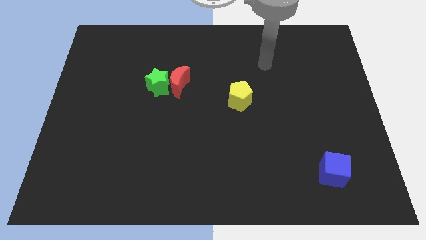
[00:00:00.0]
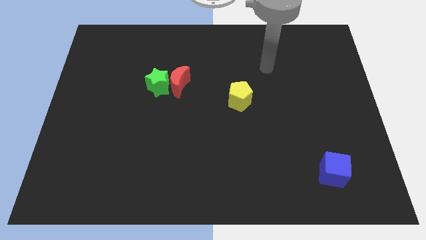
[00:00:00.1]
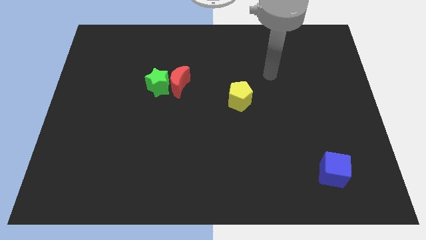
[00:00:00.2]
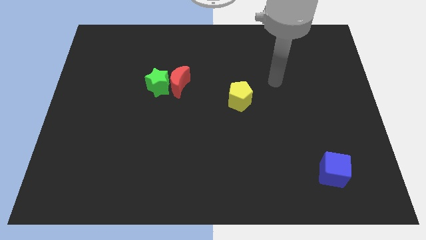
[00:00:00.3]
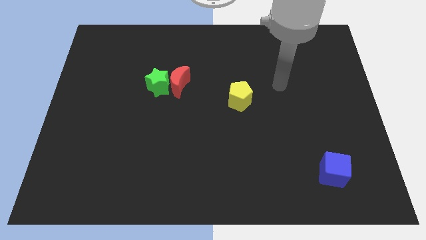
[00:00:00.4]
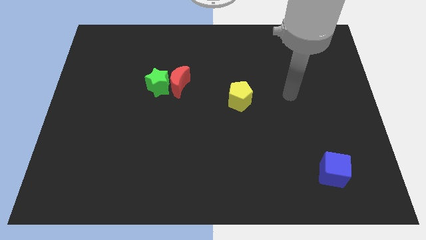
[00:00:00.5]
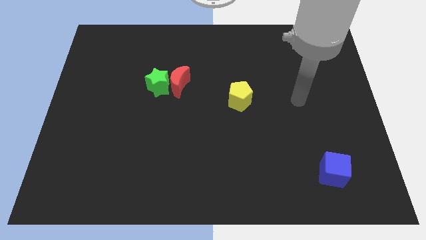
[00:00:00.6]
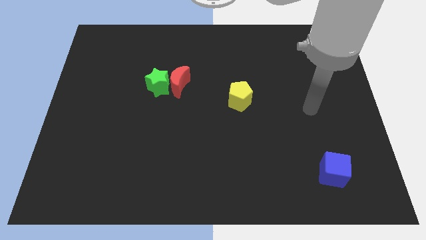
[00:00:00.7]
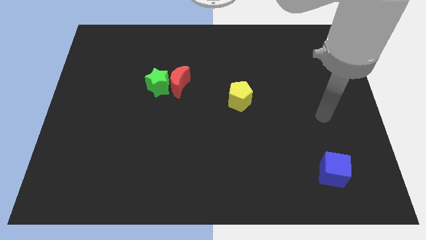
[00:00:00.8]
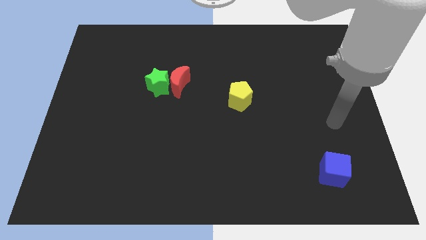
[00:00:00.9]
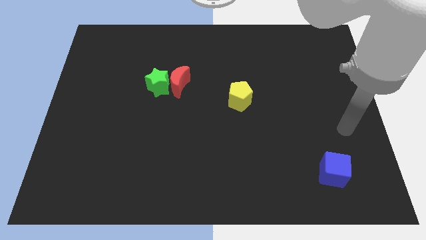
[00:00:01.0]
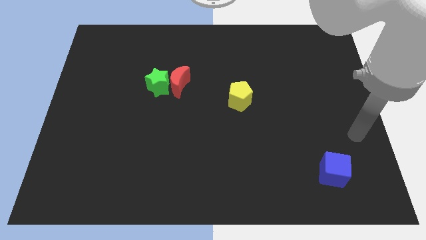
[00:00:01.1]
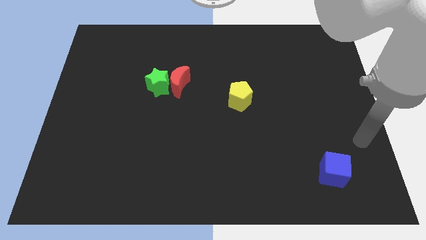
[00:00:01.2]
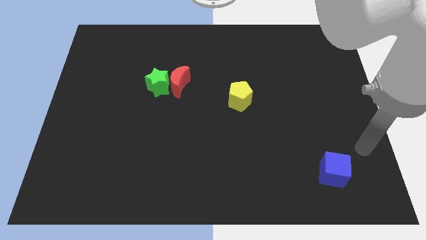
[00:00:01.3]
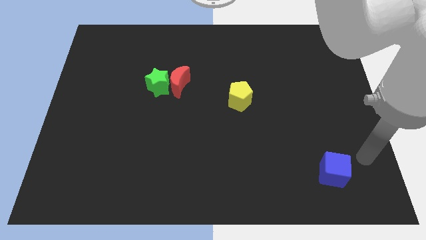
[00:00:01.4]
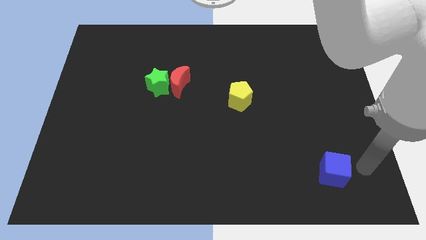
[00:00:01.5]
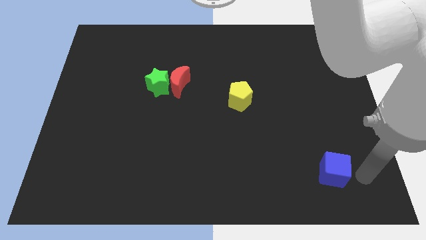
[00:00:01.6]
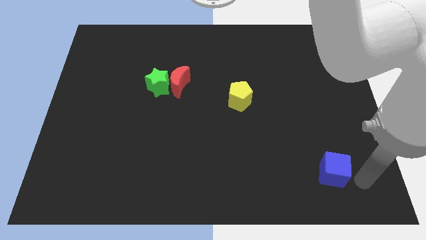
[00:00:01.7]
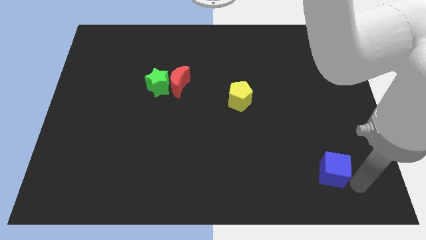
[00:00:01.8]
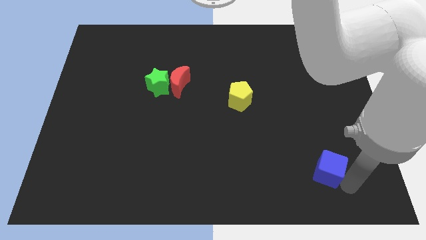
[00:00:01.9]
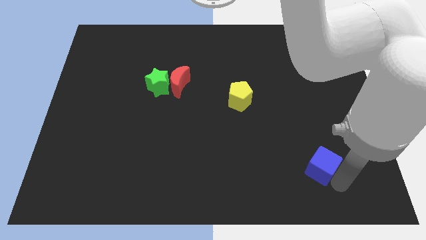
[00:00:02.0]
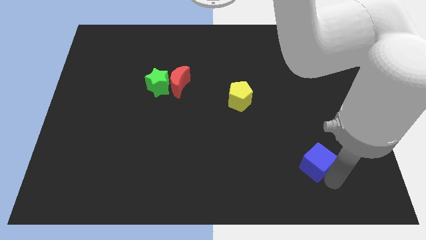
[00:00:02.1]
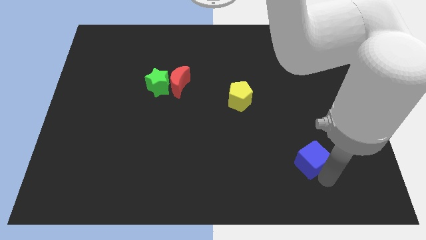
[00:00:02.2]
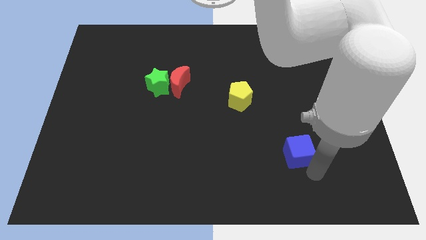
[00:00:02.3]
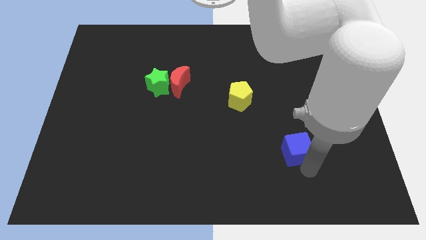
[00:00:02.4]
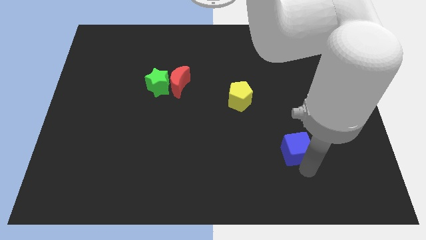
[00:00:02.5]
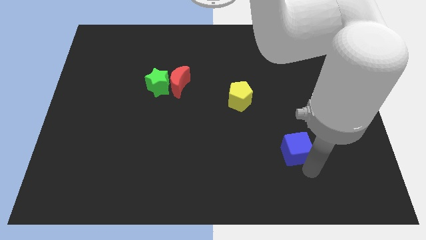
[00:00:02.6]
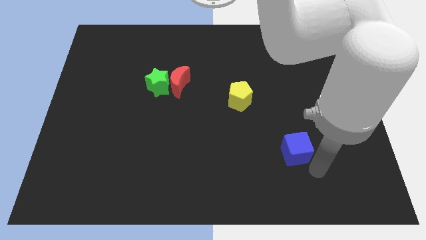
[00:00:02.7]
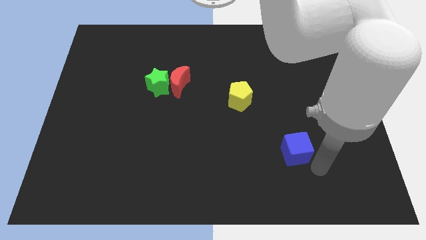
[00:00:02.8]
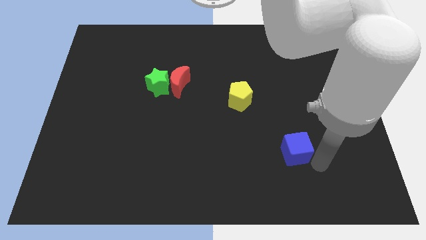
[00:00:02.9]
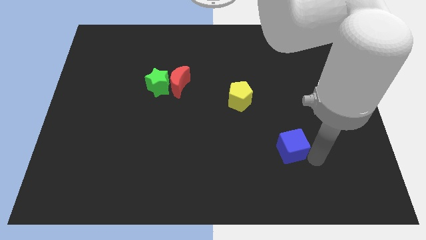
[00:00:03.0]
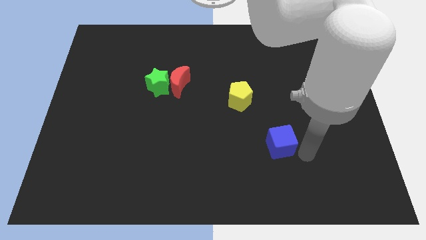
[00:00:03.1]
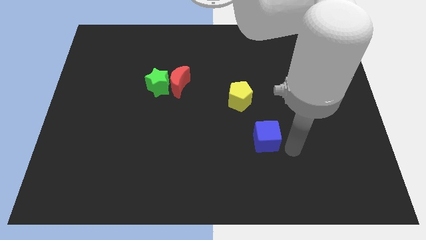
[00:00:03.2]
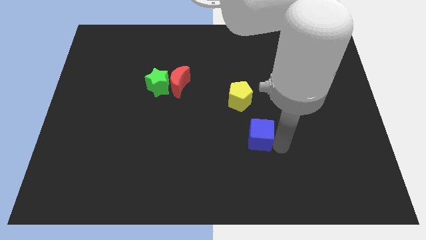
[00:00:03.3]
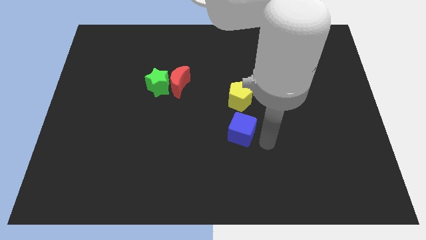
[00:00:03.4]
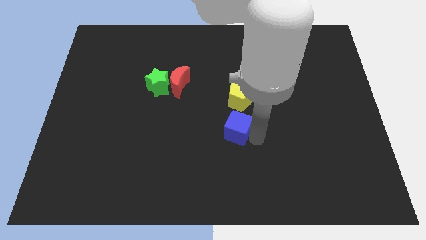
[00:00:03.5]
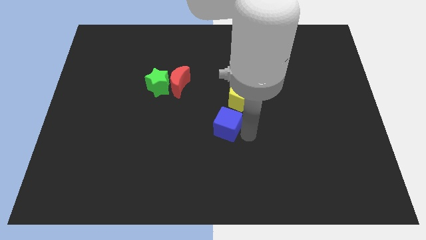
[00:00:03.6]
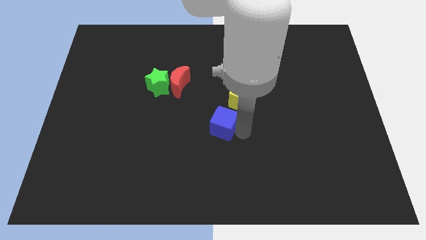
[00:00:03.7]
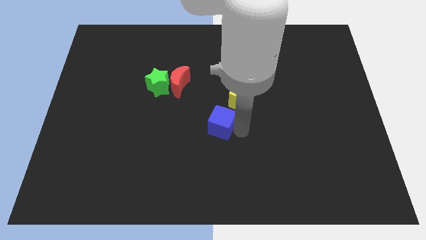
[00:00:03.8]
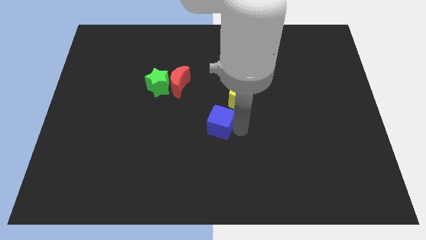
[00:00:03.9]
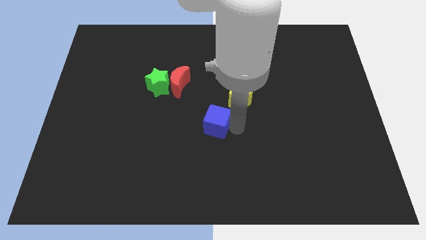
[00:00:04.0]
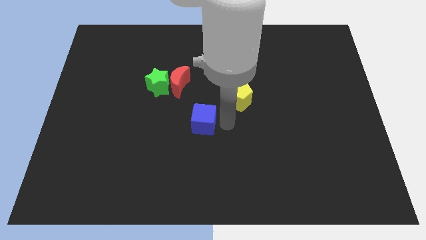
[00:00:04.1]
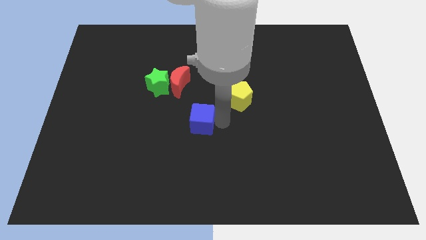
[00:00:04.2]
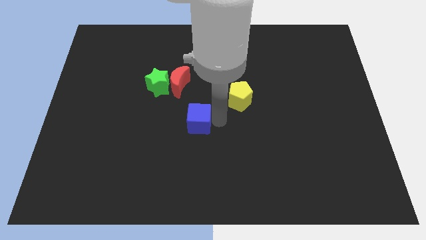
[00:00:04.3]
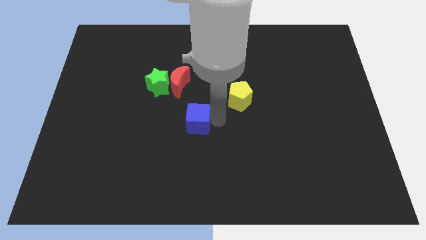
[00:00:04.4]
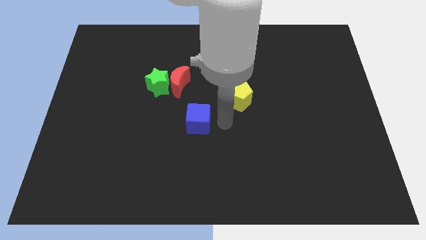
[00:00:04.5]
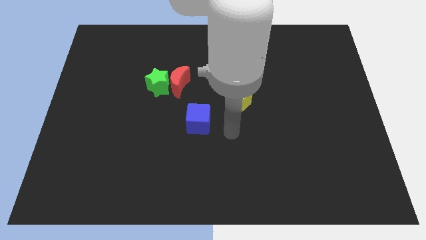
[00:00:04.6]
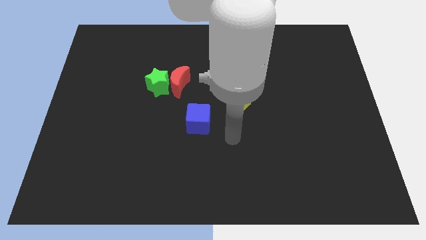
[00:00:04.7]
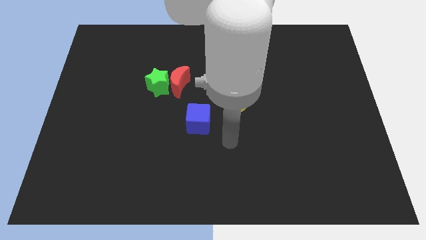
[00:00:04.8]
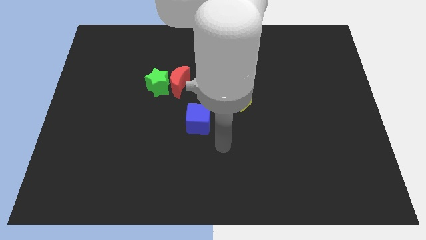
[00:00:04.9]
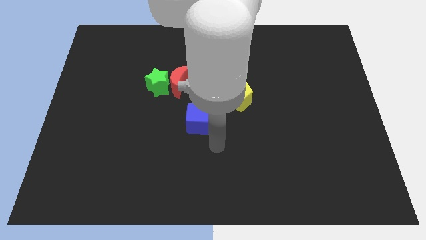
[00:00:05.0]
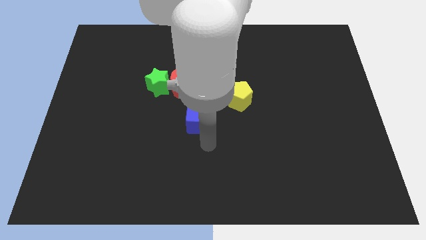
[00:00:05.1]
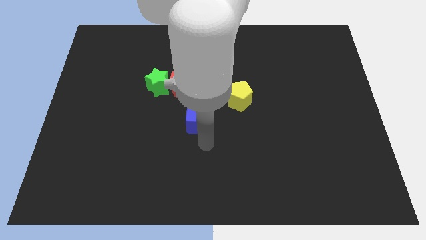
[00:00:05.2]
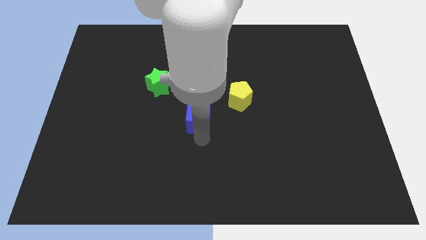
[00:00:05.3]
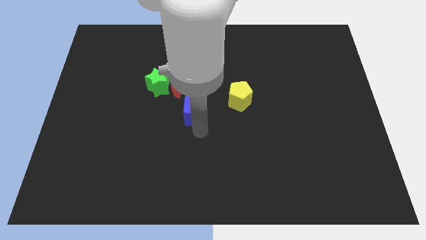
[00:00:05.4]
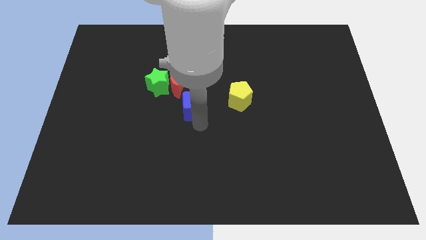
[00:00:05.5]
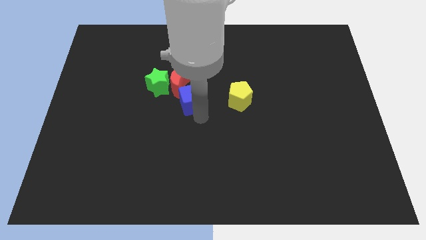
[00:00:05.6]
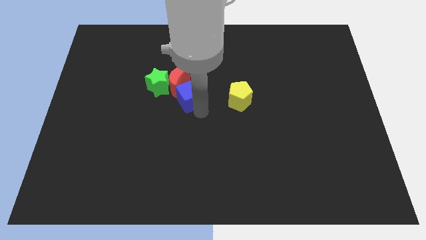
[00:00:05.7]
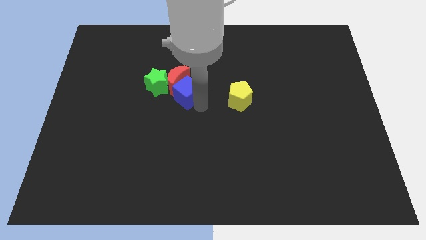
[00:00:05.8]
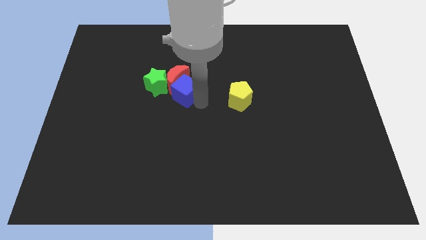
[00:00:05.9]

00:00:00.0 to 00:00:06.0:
push the blue block close to the red block

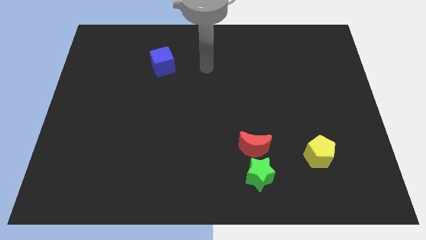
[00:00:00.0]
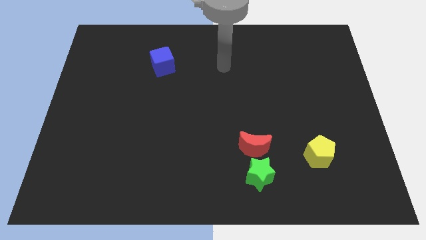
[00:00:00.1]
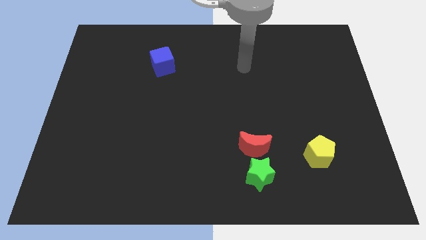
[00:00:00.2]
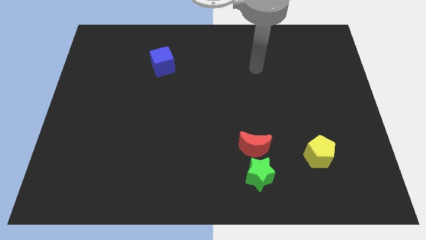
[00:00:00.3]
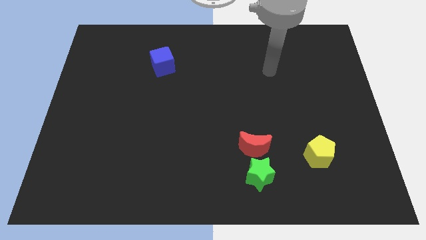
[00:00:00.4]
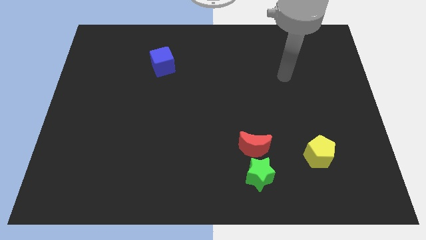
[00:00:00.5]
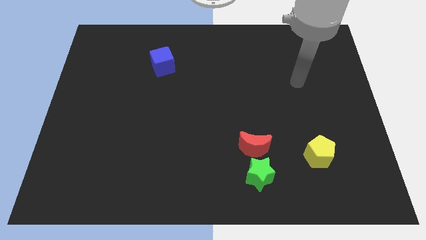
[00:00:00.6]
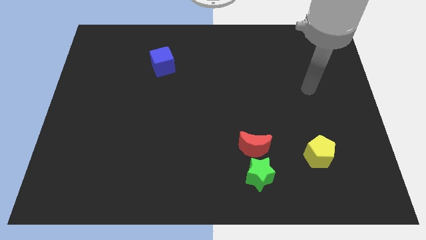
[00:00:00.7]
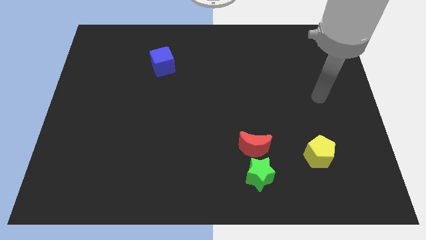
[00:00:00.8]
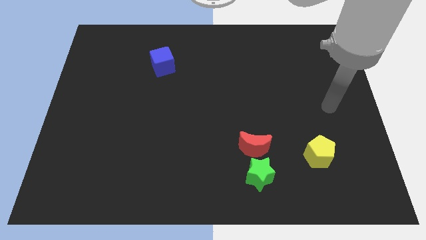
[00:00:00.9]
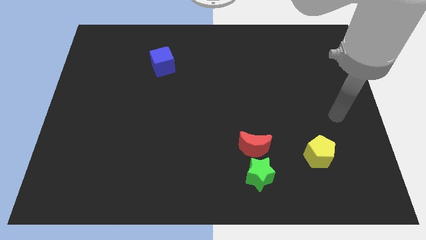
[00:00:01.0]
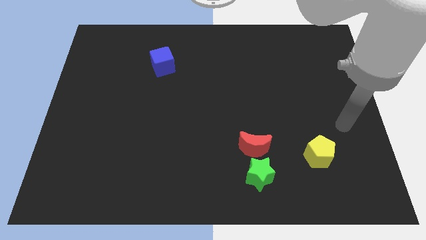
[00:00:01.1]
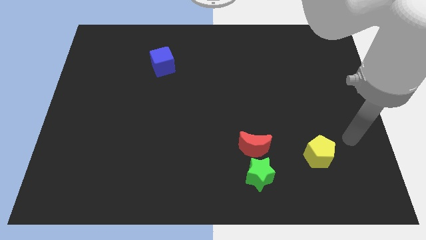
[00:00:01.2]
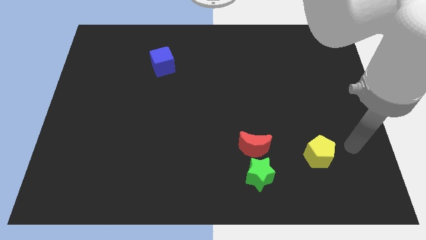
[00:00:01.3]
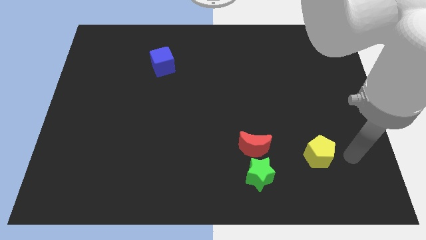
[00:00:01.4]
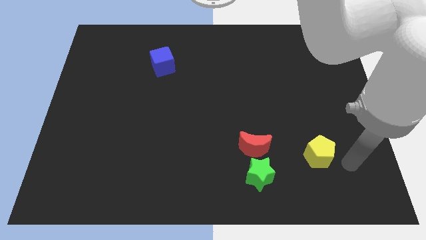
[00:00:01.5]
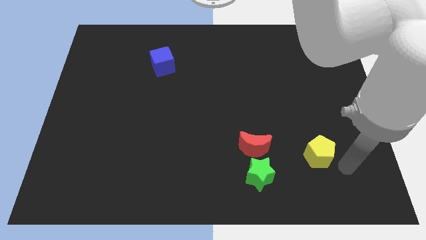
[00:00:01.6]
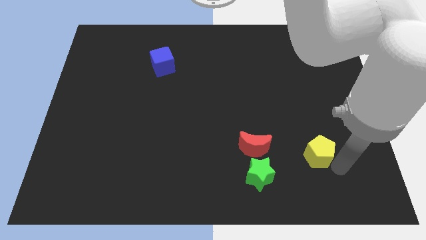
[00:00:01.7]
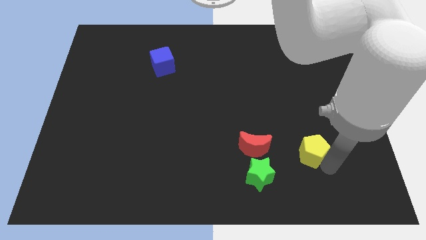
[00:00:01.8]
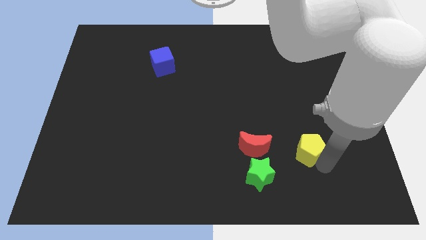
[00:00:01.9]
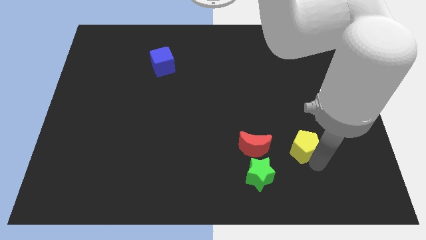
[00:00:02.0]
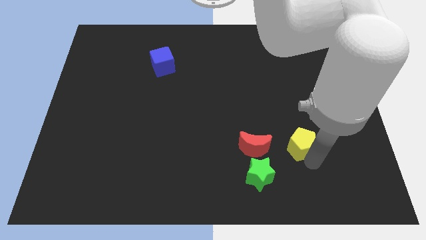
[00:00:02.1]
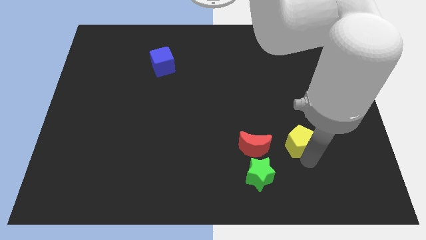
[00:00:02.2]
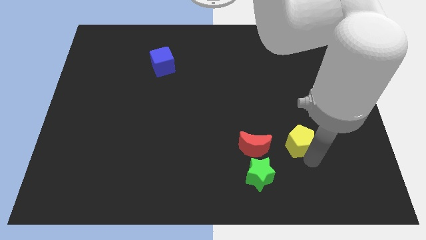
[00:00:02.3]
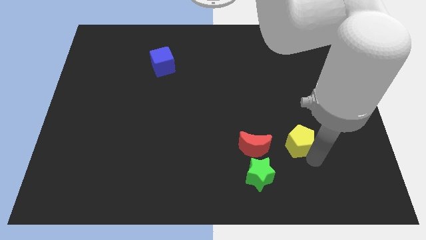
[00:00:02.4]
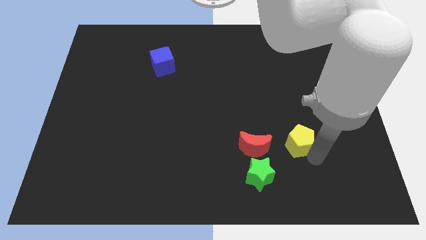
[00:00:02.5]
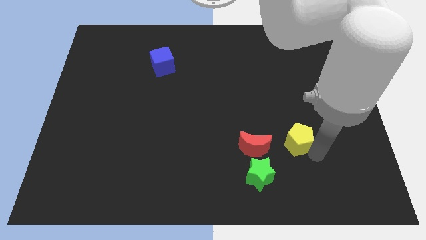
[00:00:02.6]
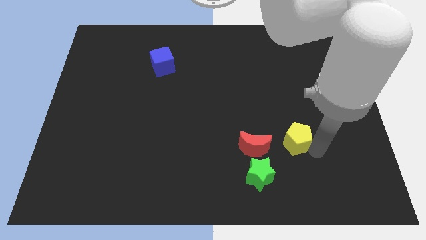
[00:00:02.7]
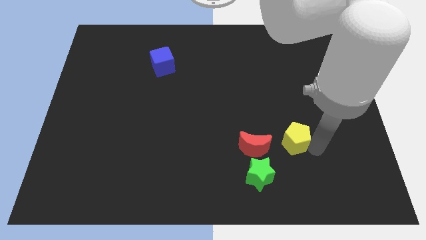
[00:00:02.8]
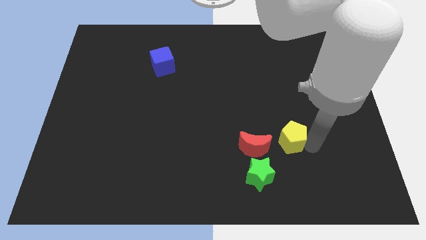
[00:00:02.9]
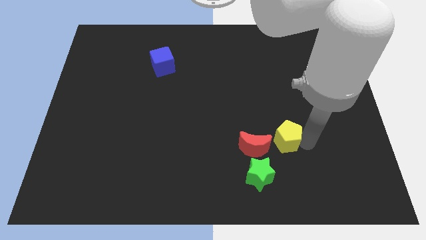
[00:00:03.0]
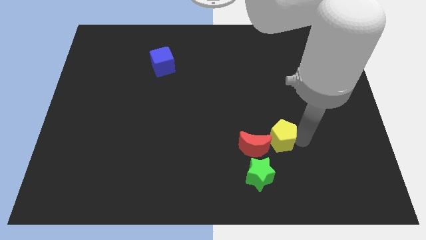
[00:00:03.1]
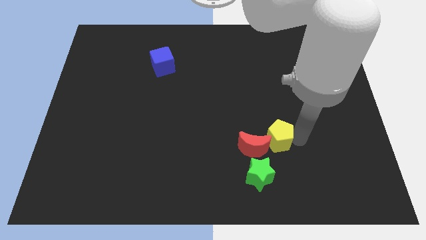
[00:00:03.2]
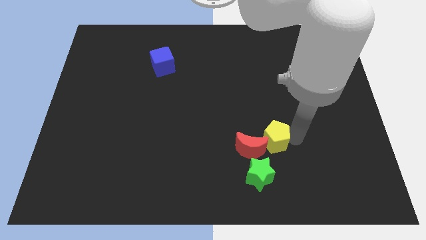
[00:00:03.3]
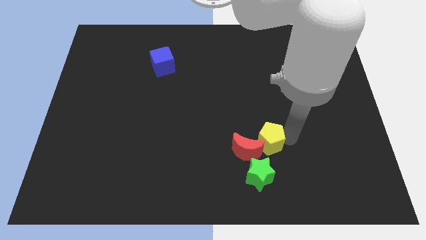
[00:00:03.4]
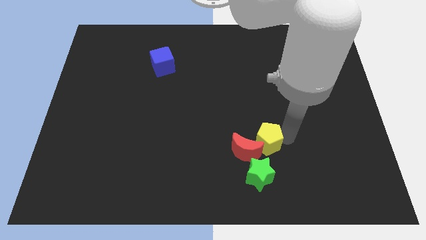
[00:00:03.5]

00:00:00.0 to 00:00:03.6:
push the pentagon towards the red moon
